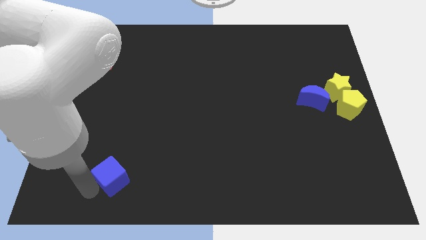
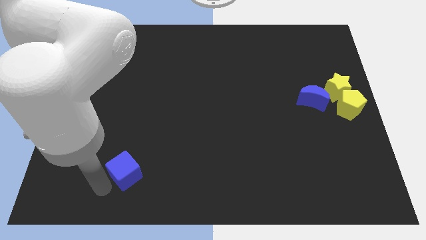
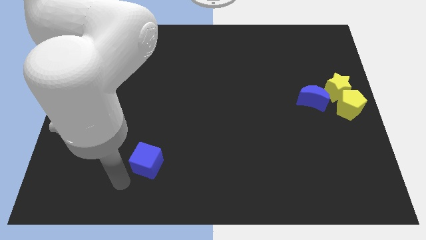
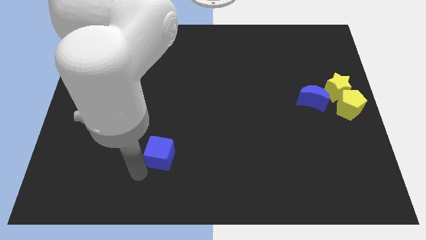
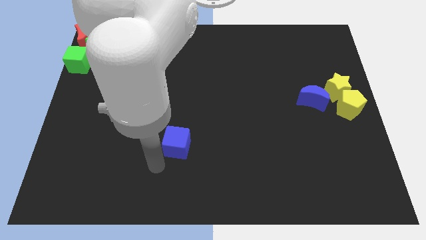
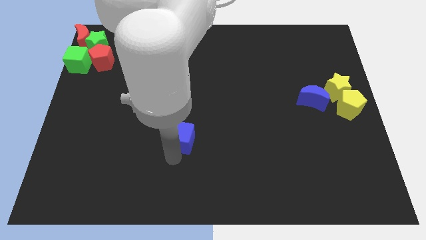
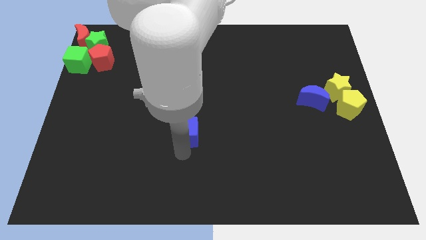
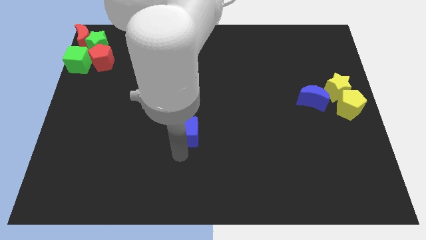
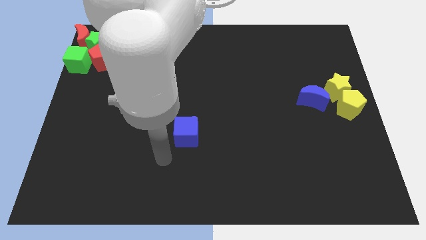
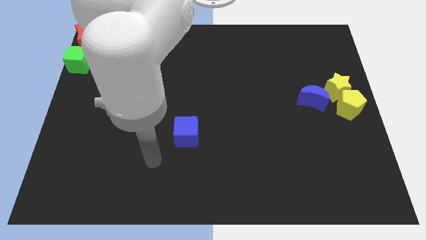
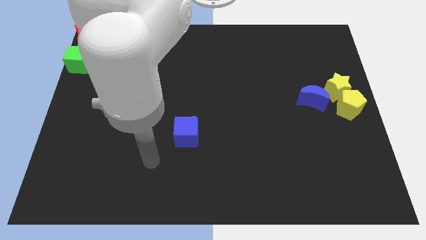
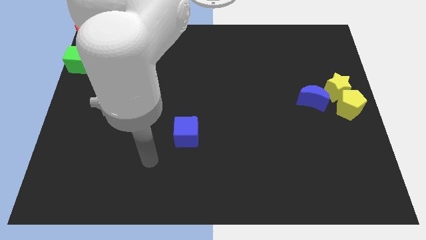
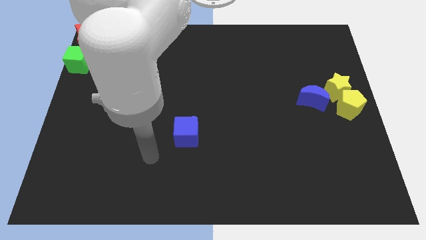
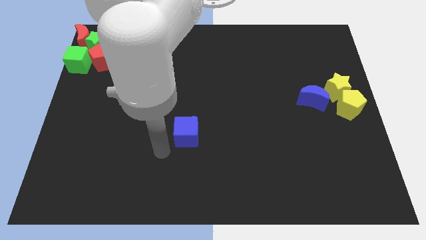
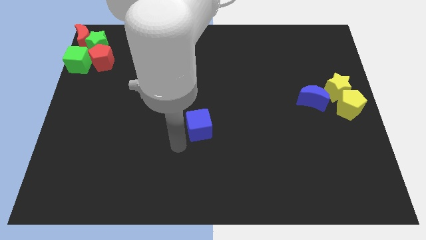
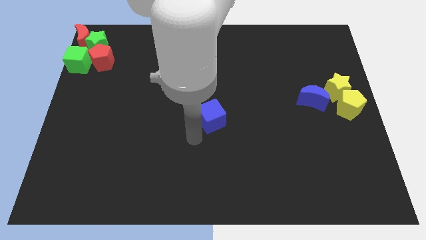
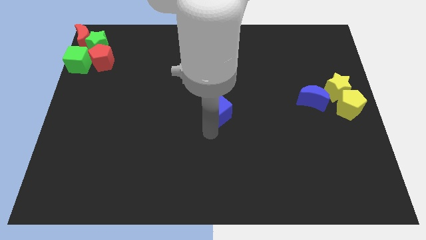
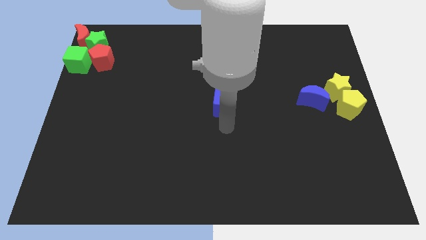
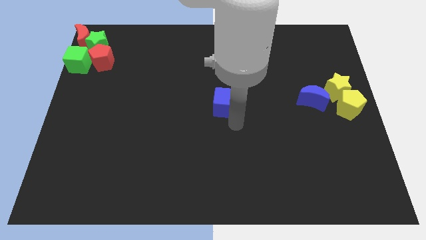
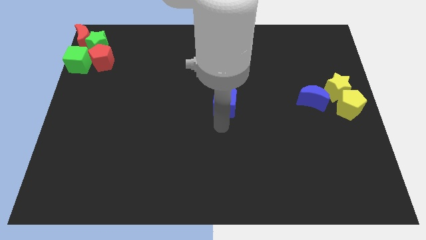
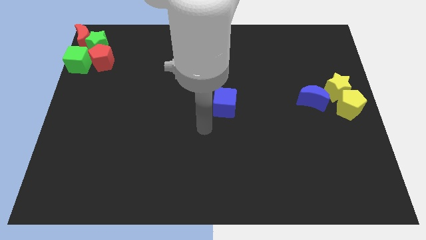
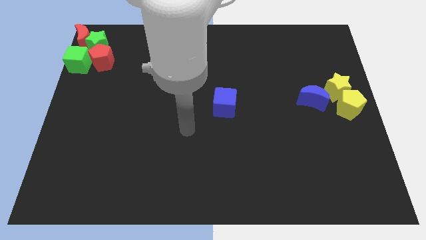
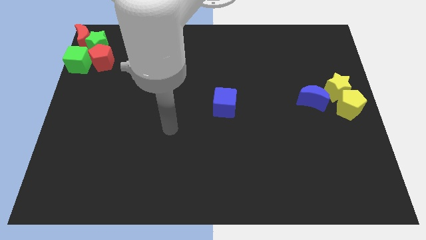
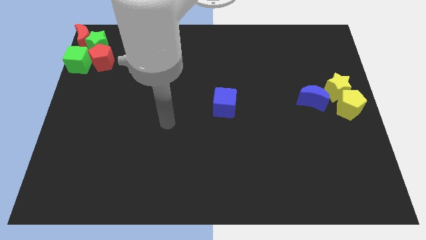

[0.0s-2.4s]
place the blue cube at the center of the board

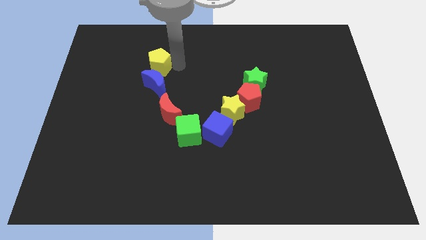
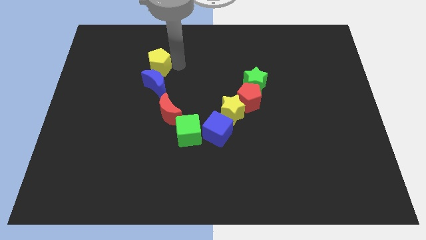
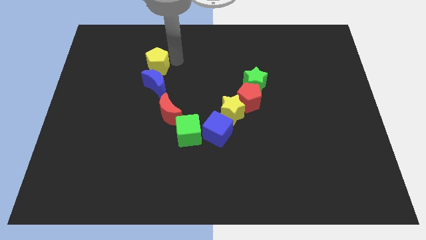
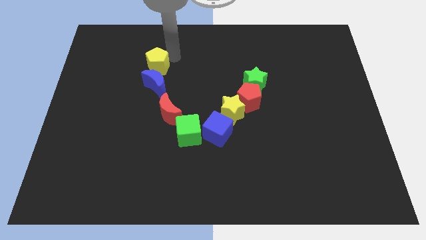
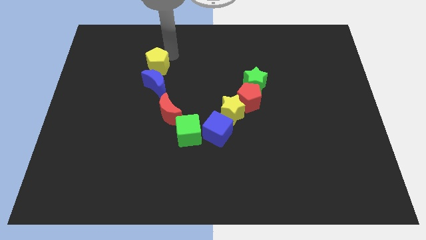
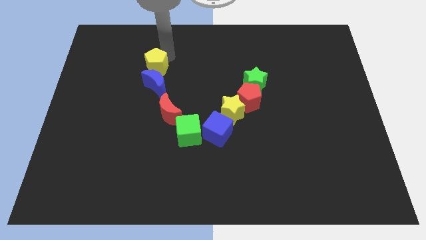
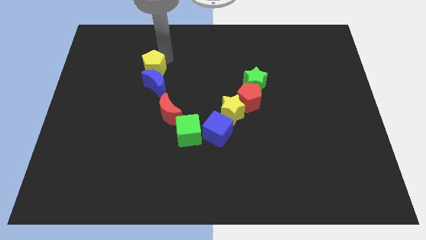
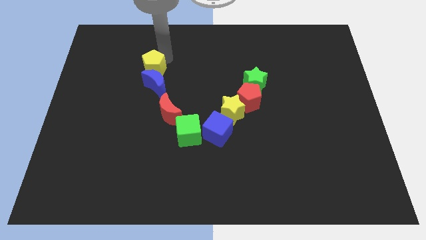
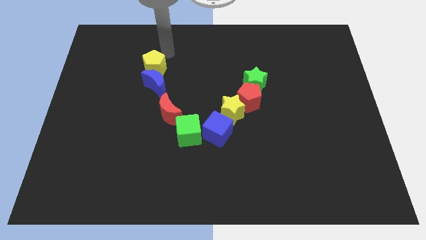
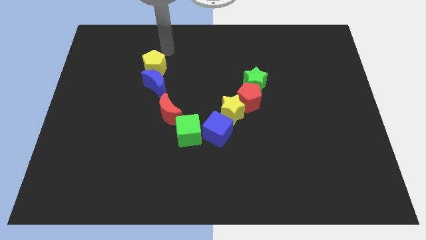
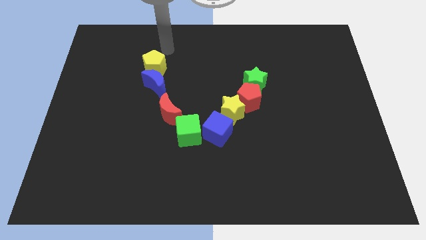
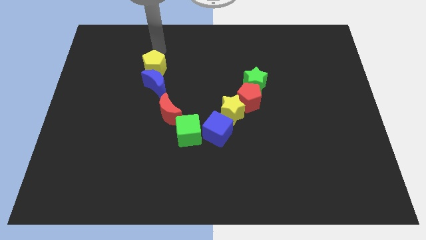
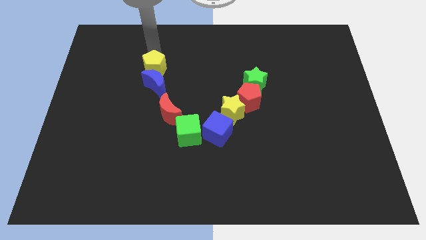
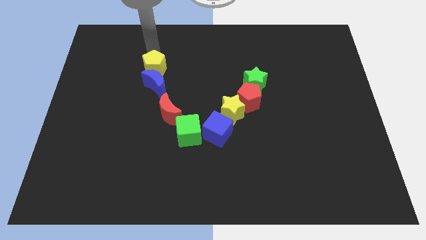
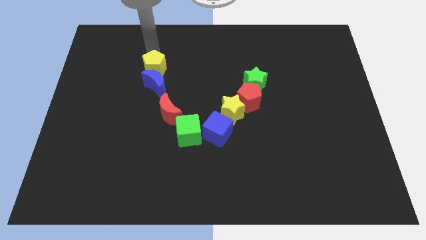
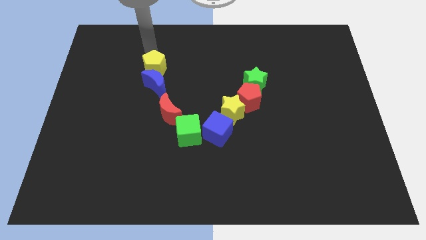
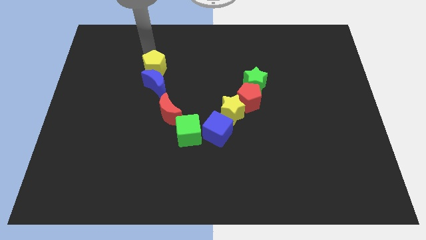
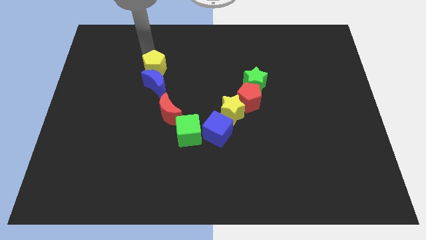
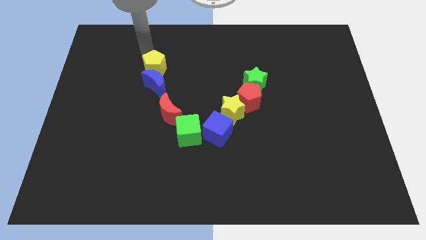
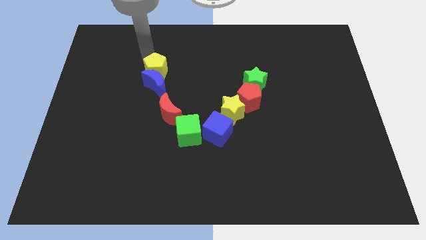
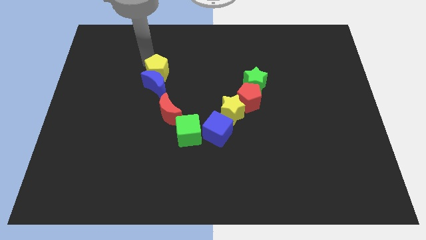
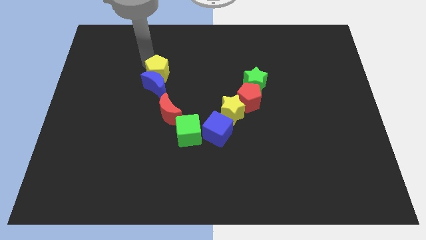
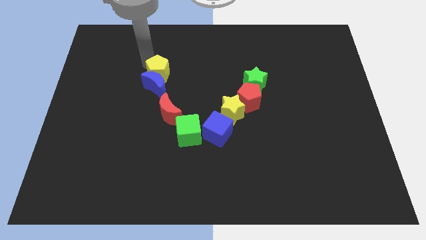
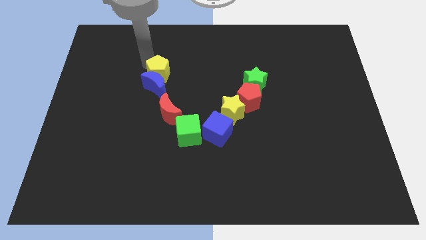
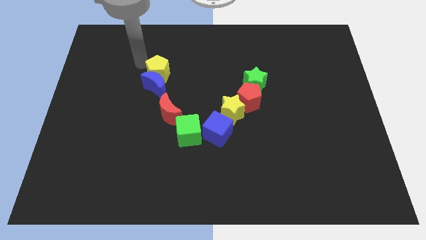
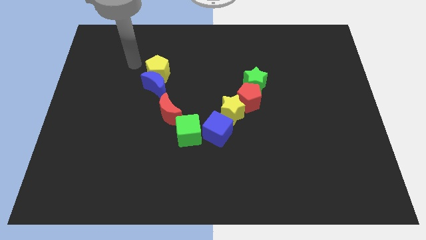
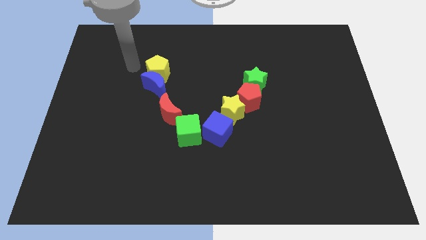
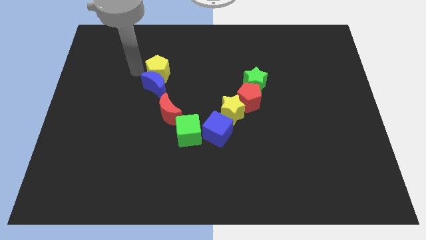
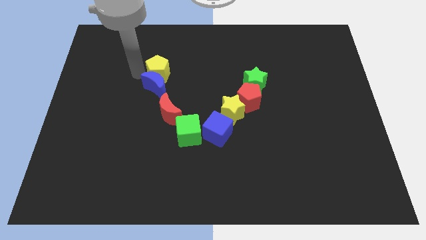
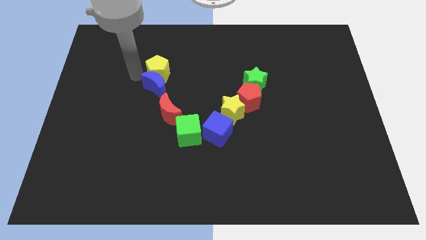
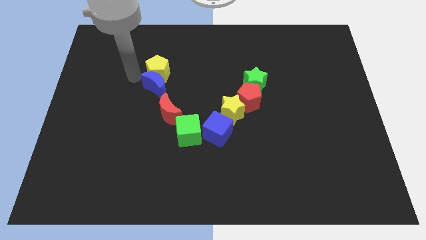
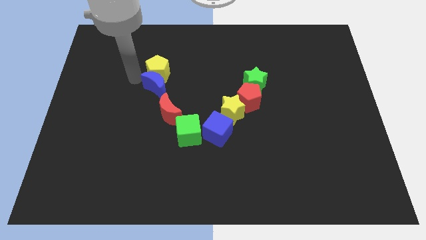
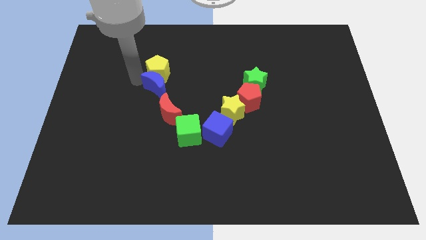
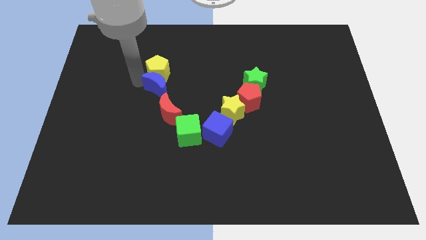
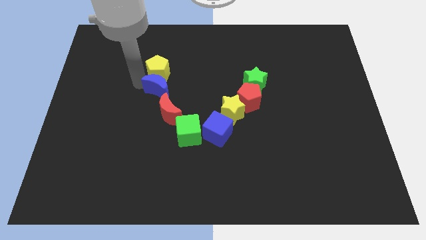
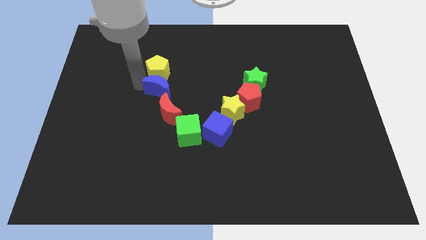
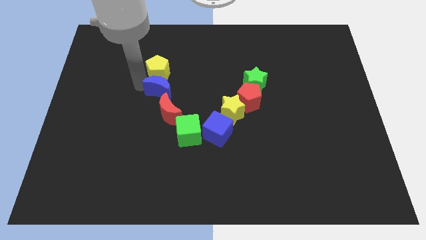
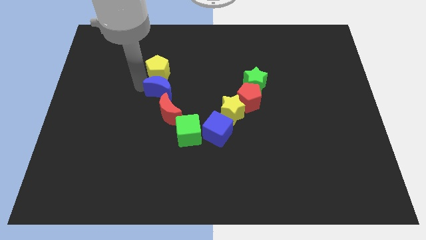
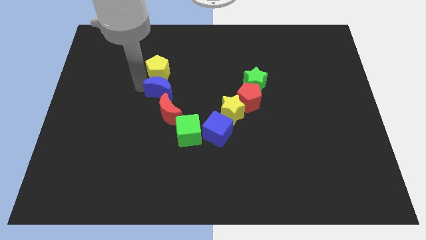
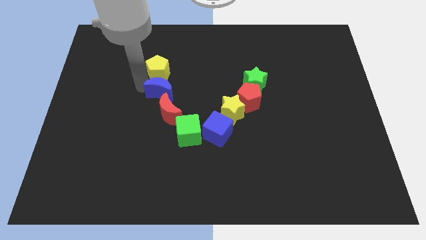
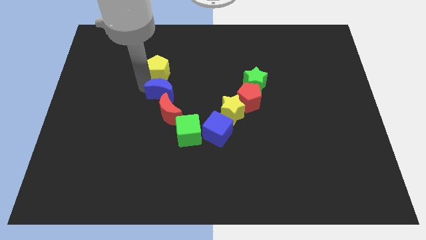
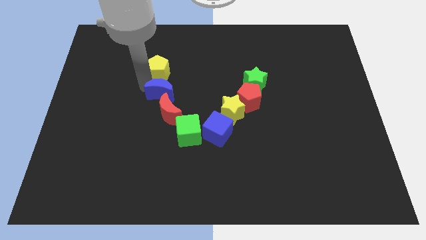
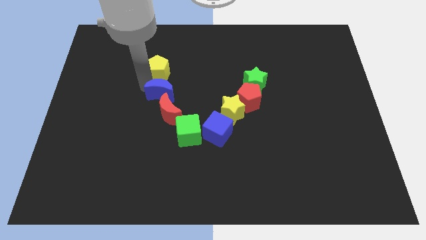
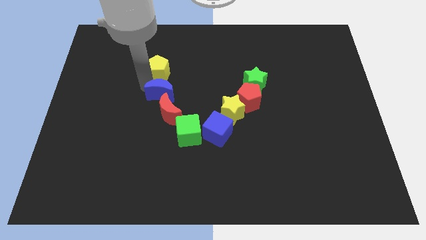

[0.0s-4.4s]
place the yellow pentagon above the blue moon

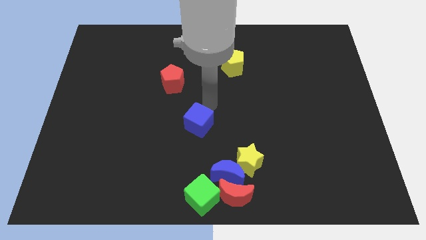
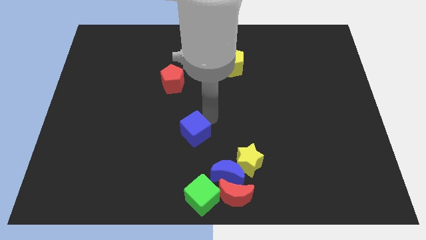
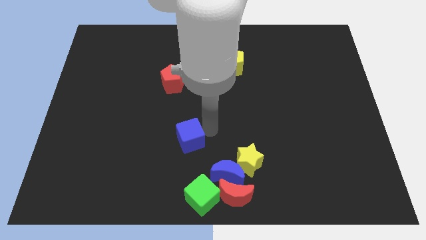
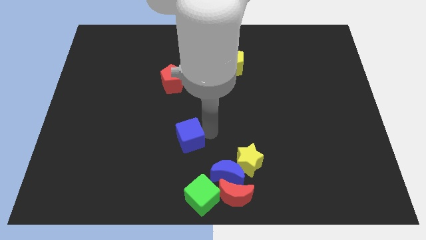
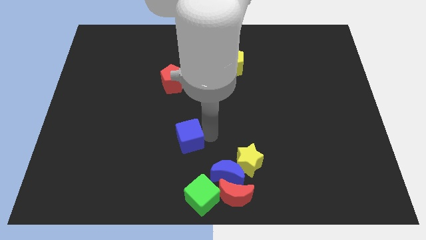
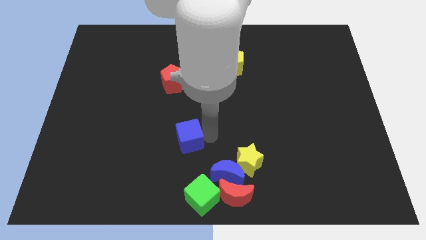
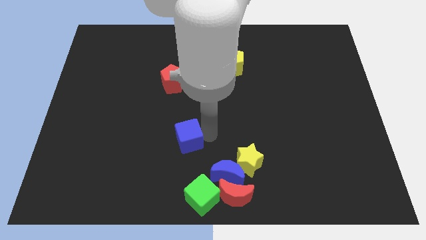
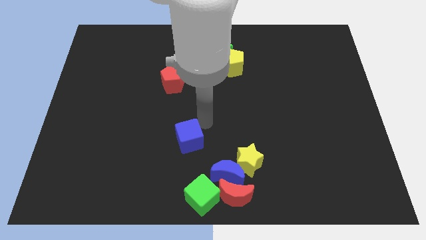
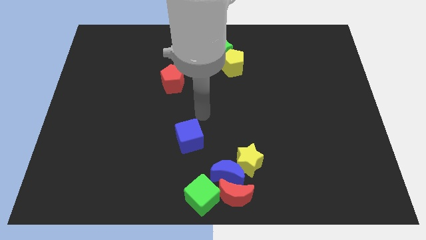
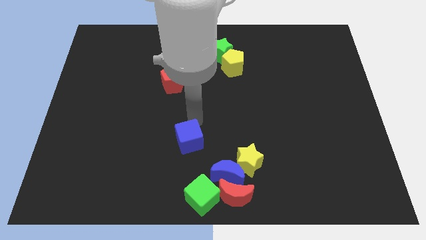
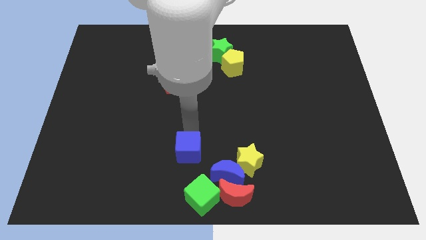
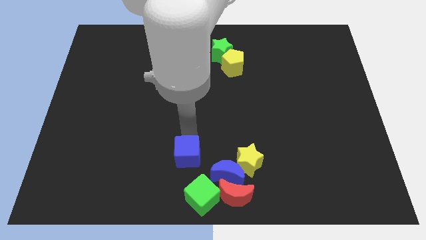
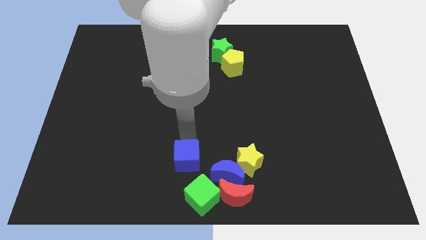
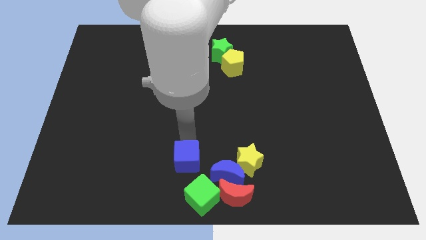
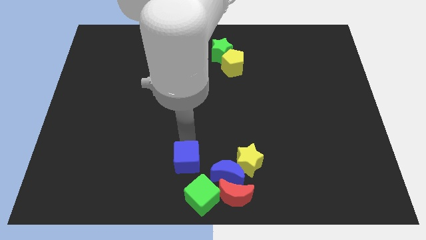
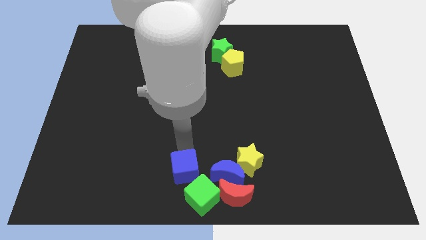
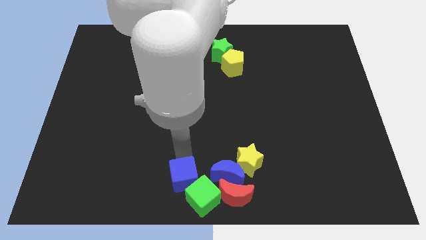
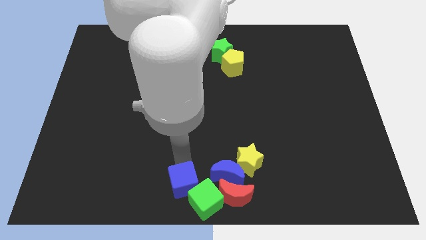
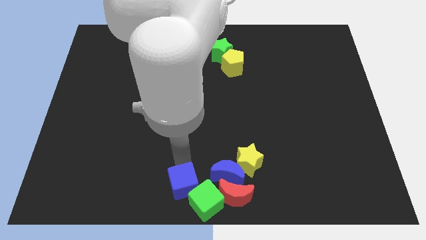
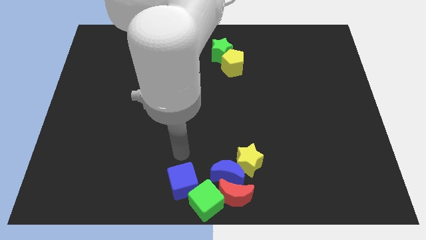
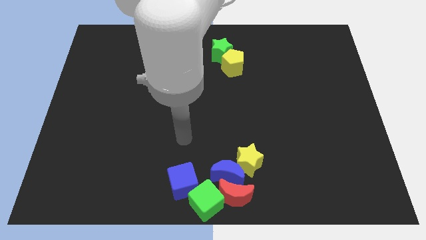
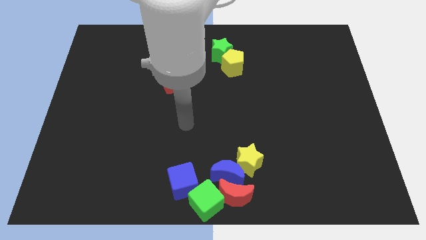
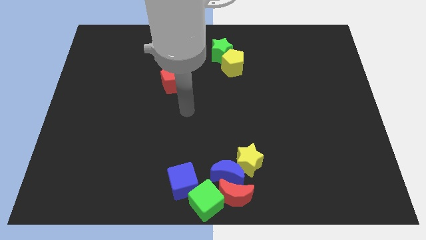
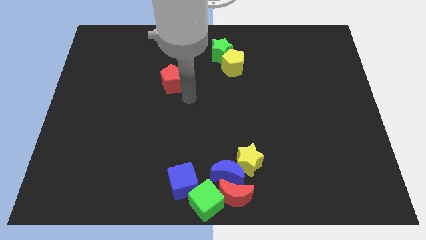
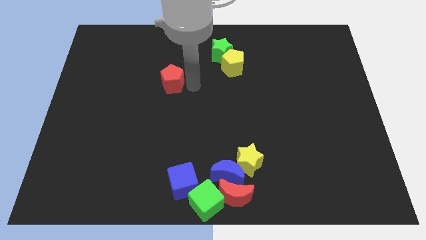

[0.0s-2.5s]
put the blue cube parallel to the left of the blue moon
